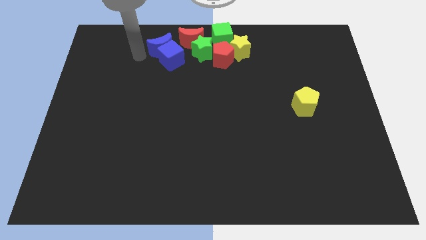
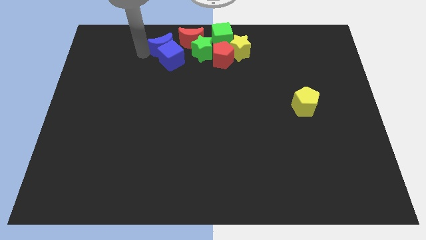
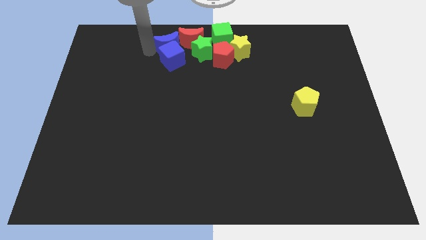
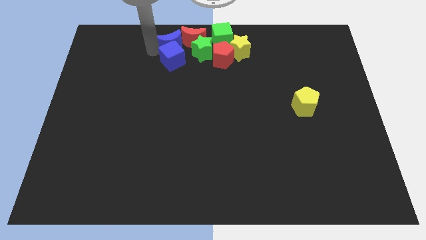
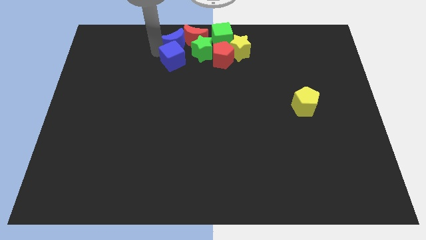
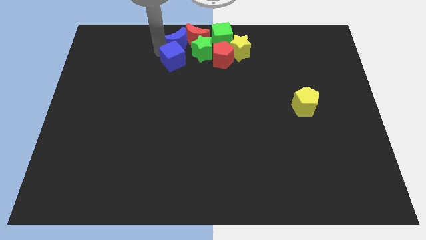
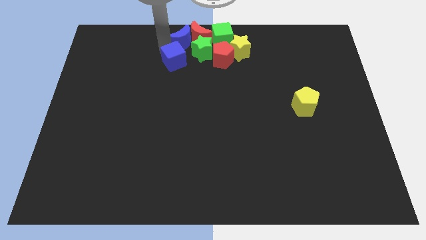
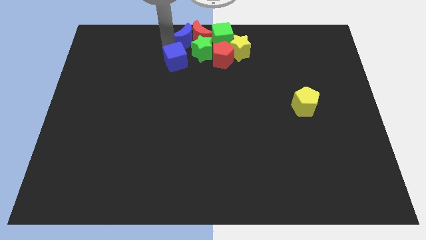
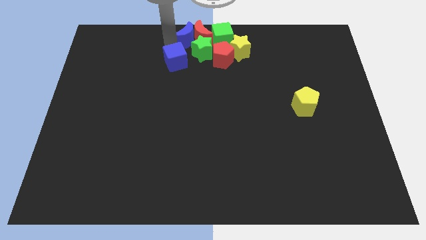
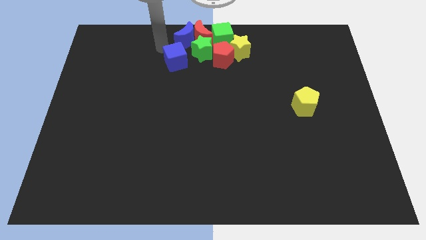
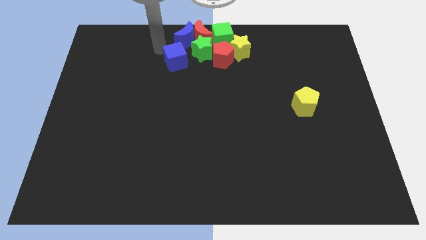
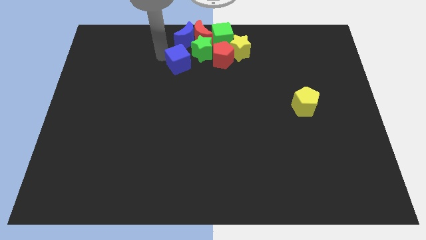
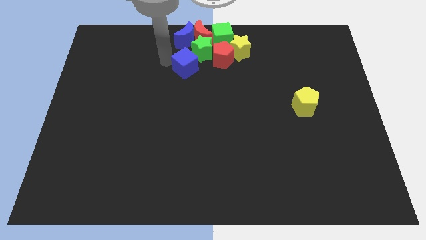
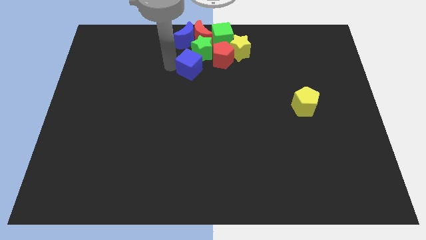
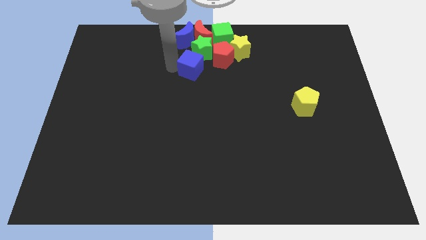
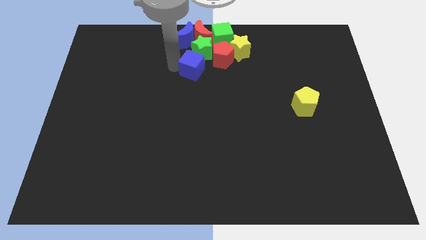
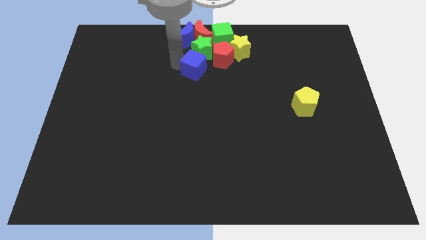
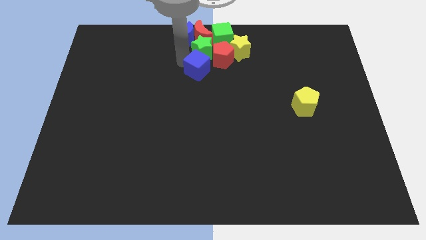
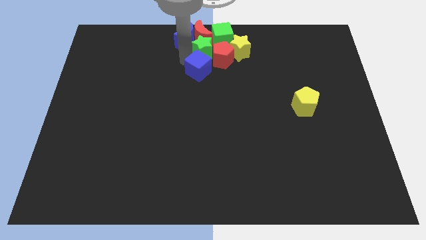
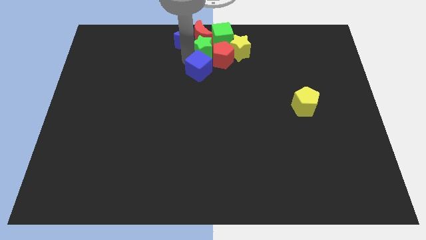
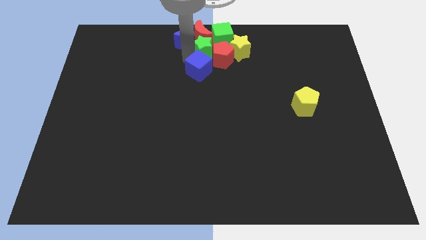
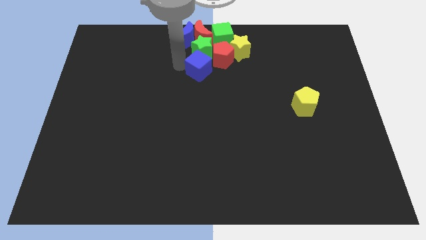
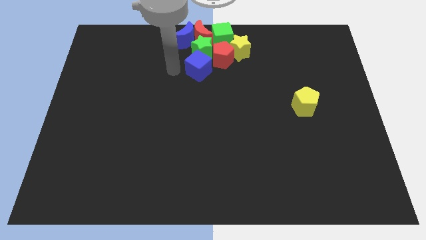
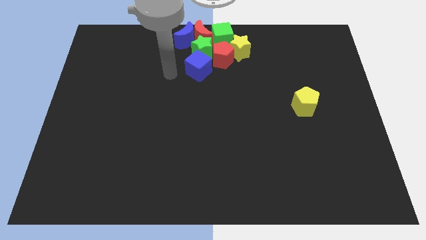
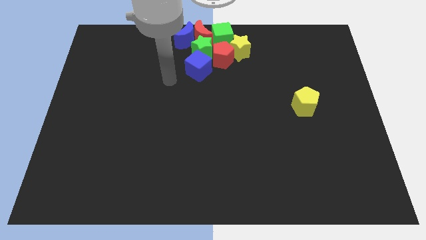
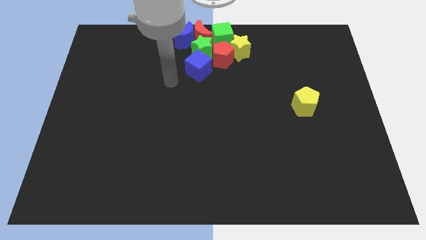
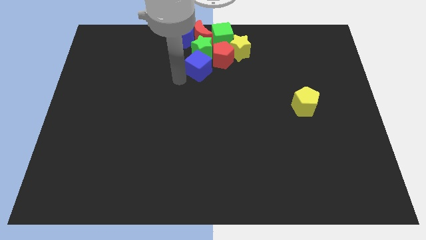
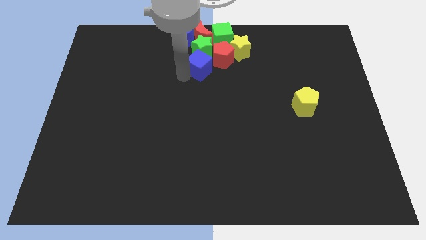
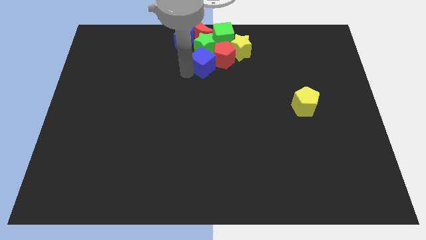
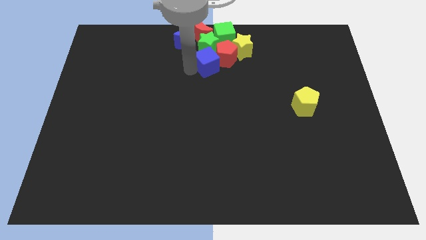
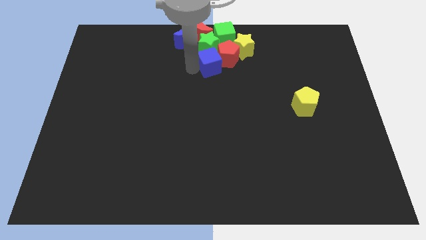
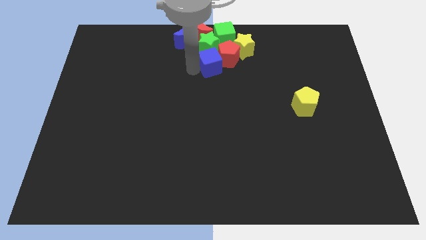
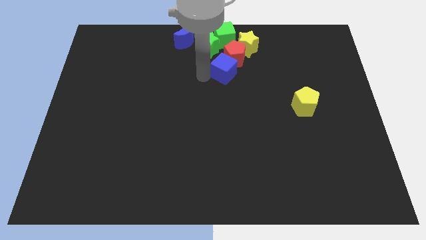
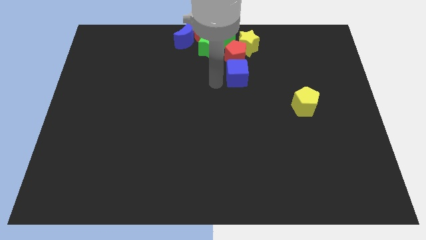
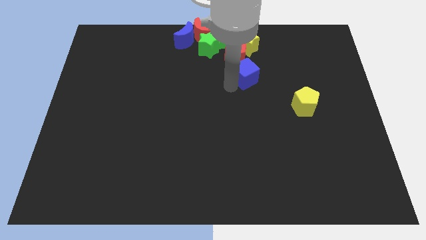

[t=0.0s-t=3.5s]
place the blue cube down to the red pentagon

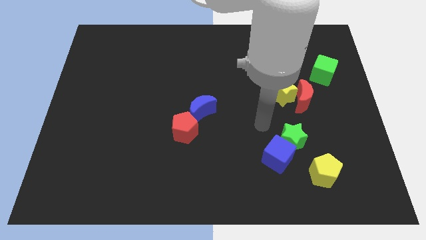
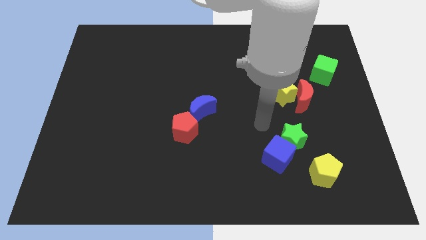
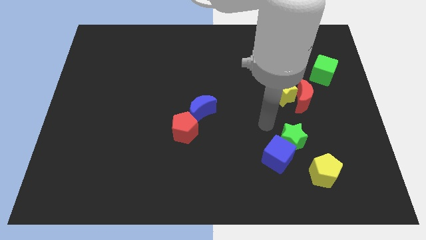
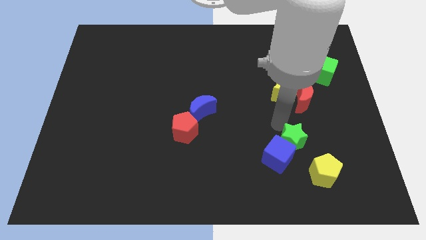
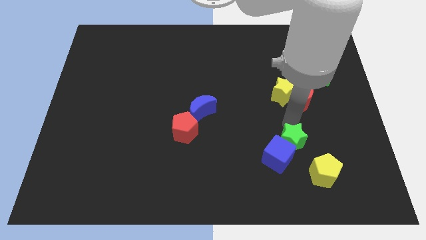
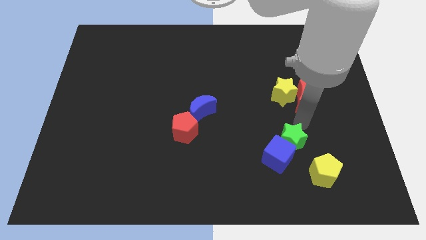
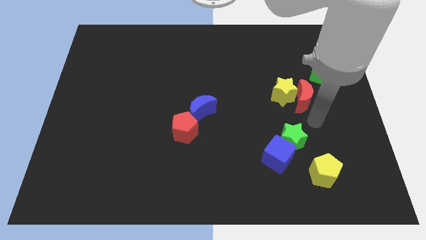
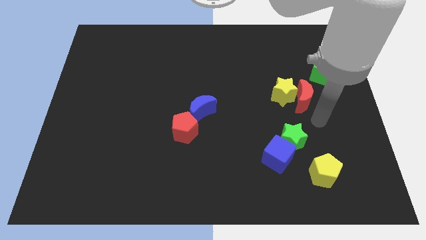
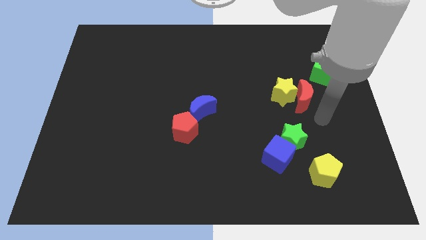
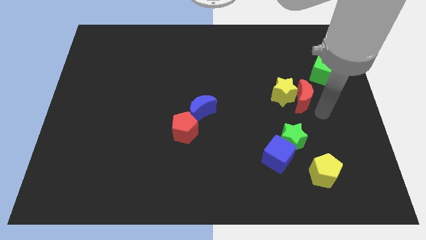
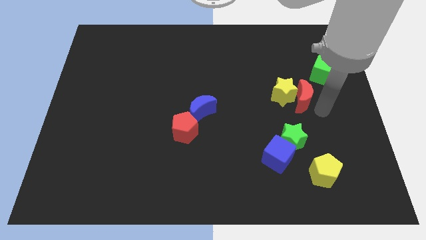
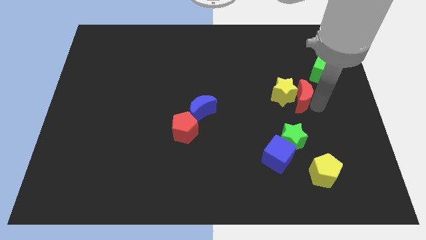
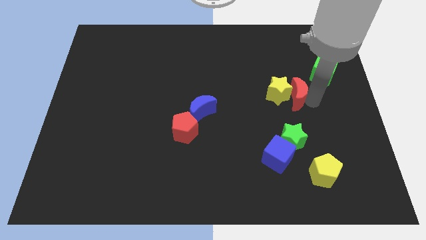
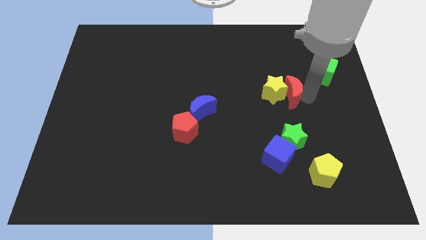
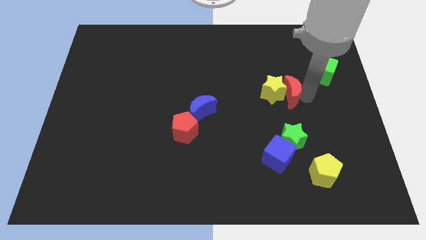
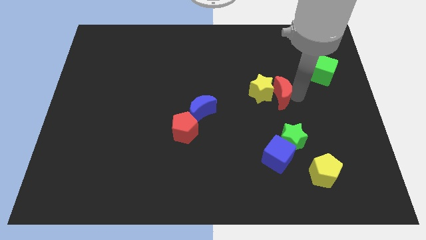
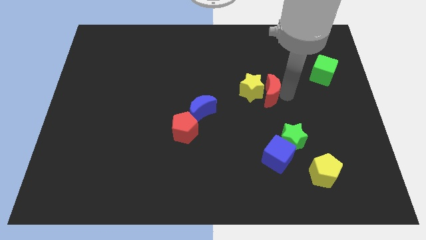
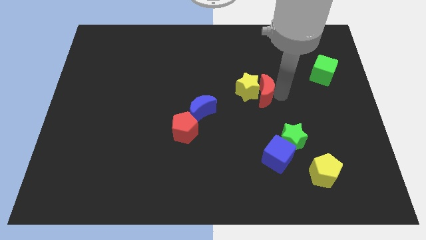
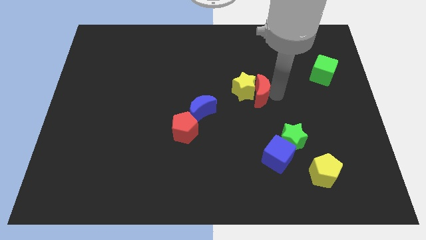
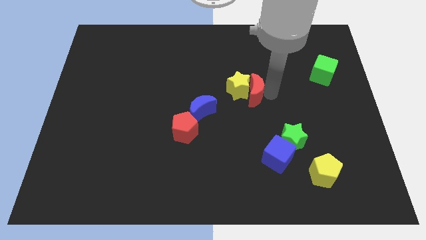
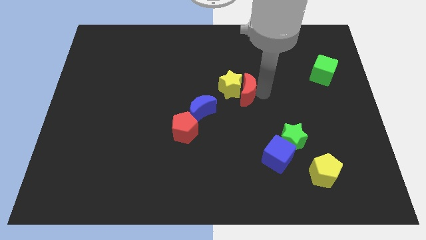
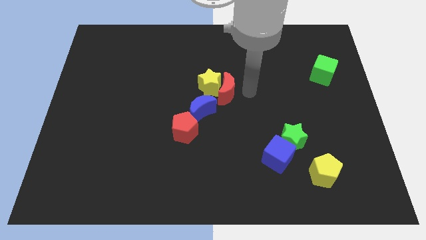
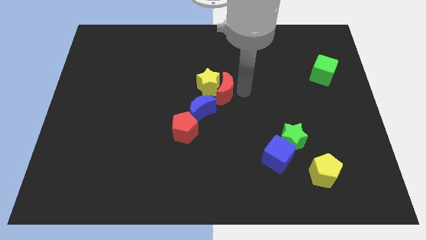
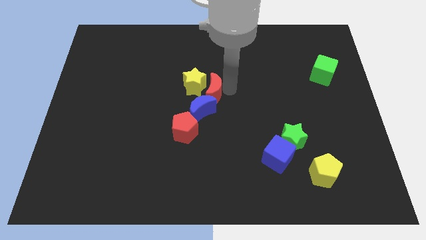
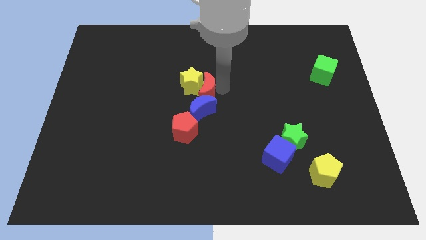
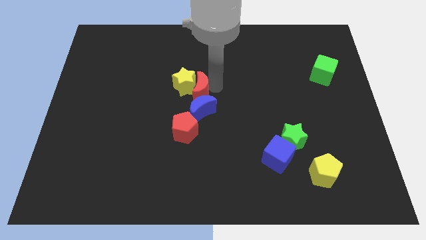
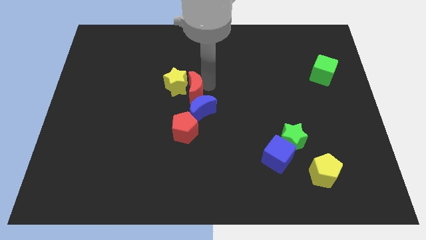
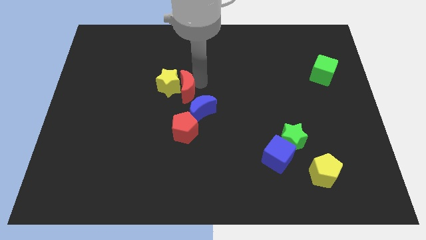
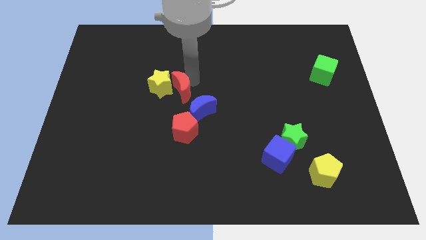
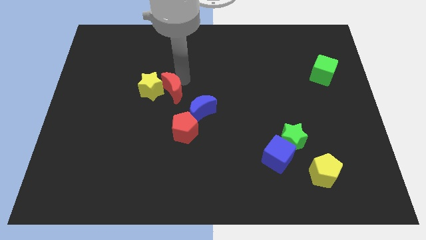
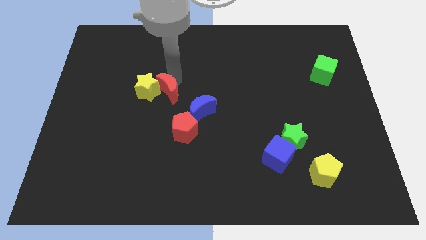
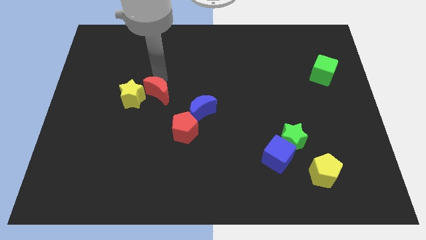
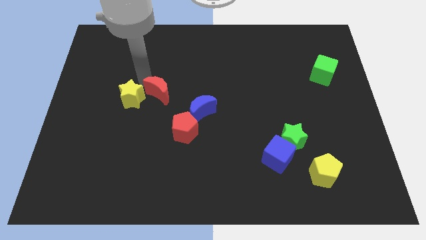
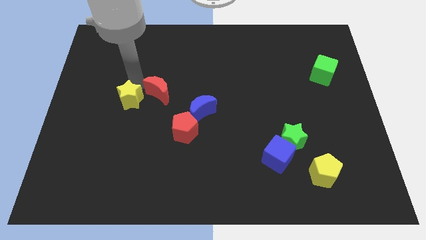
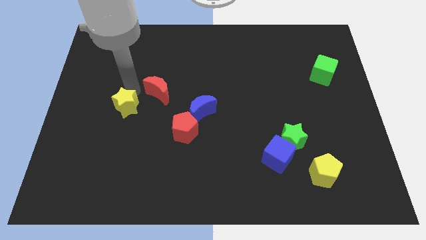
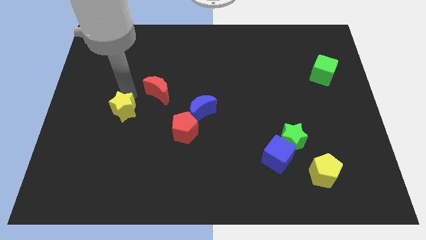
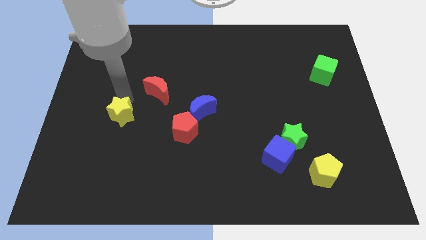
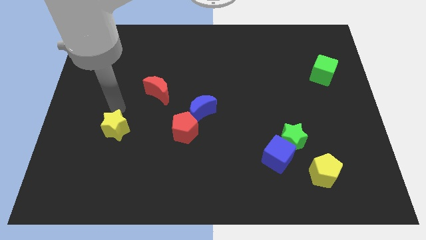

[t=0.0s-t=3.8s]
separate the yellow star and red moon

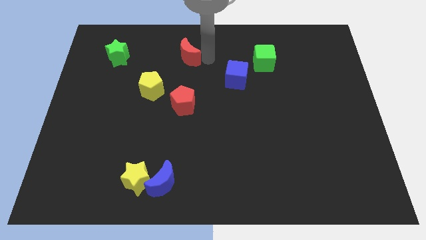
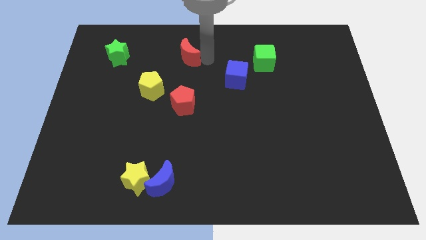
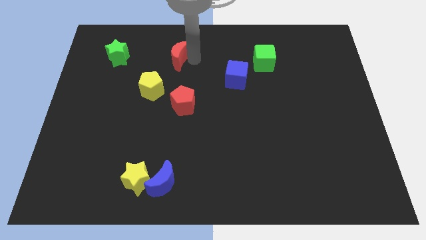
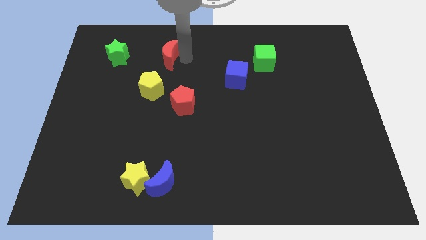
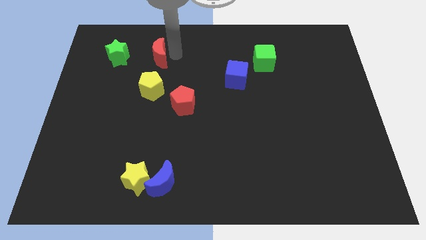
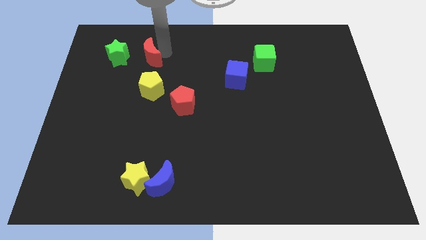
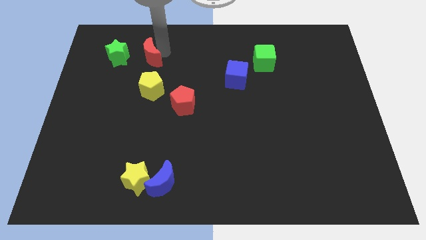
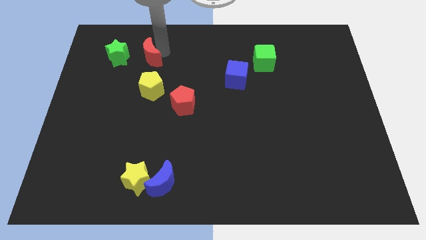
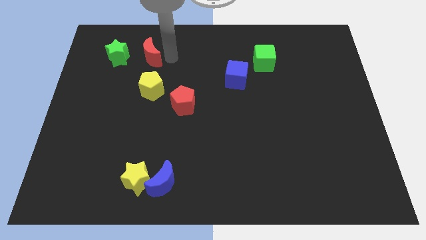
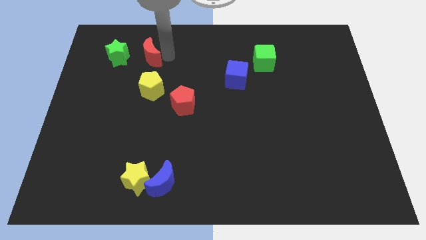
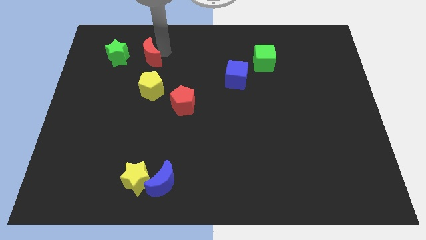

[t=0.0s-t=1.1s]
slide red moon towards green star

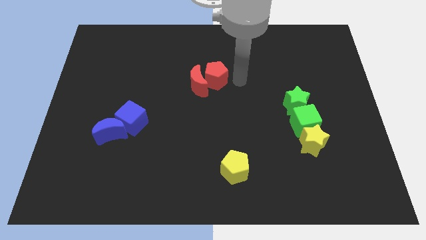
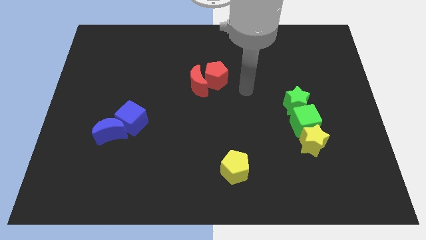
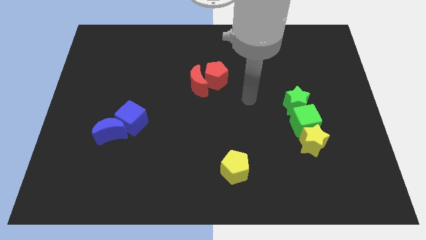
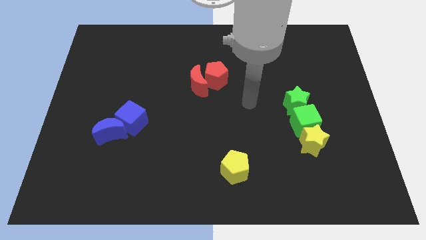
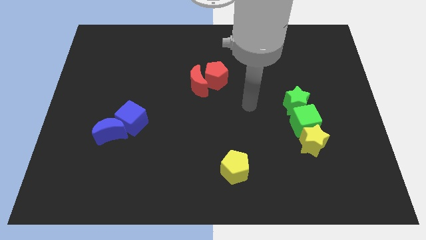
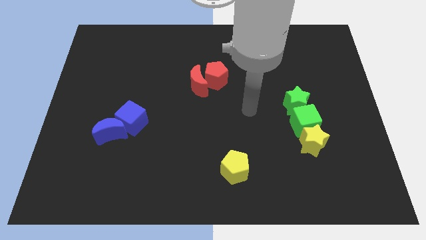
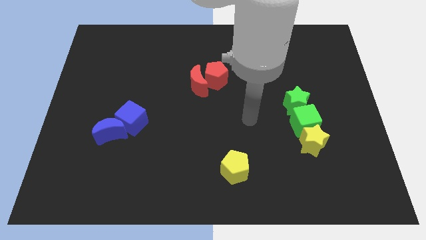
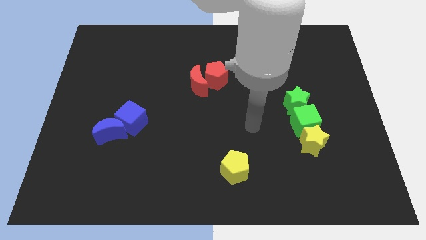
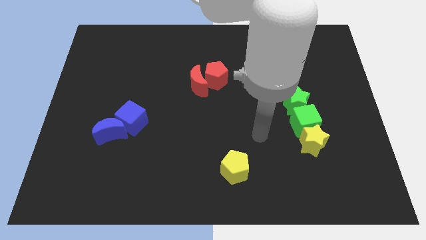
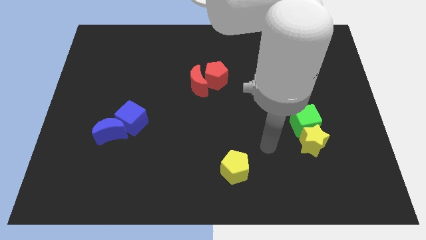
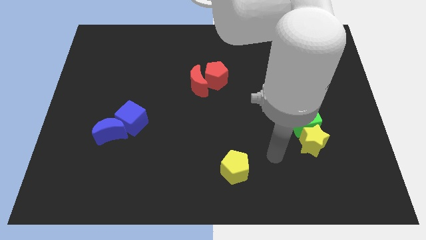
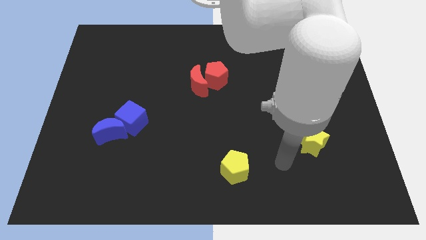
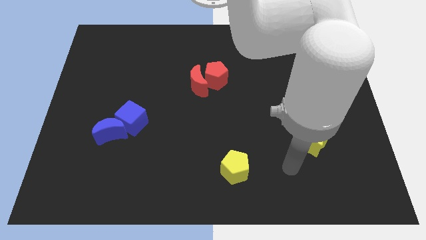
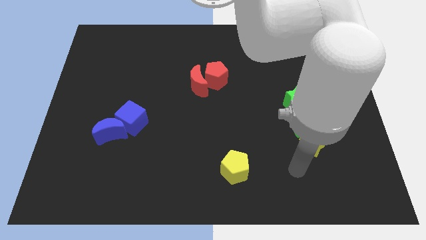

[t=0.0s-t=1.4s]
move your arm away from the red pentagon
